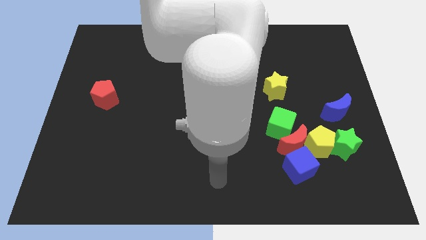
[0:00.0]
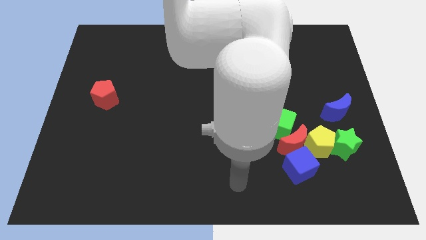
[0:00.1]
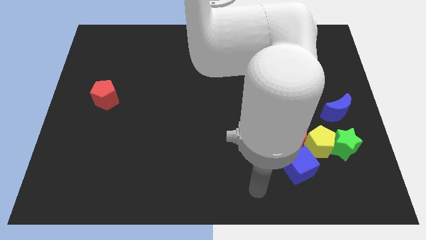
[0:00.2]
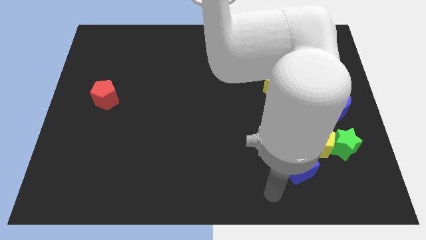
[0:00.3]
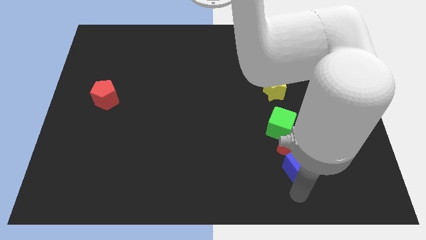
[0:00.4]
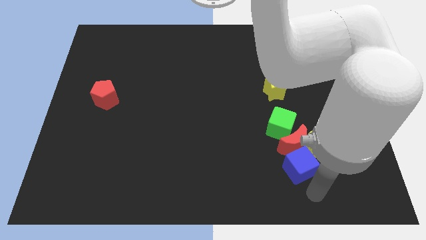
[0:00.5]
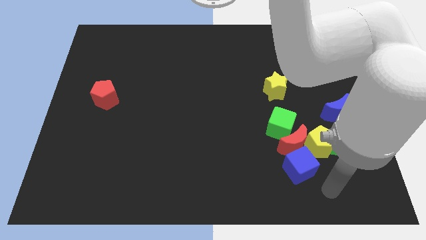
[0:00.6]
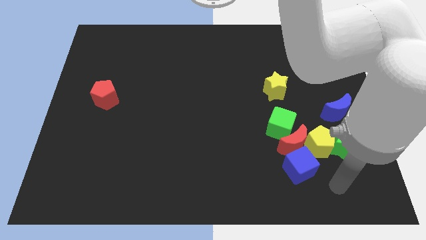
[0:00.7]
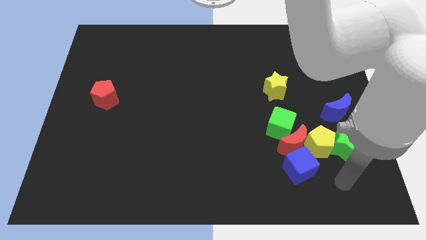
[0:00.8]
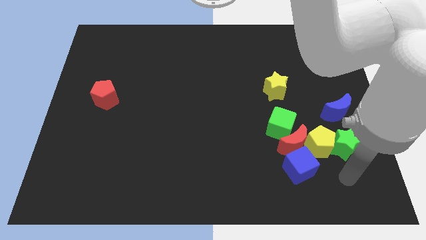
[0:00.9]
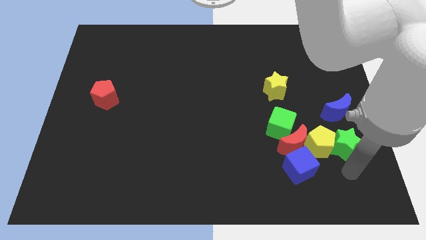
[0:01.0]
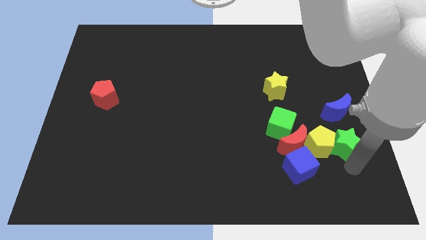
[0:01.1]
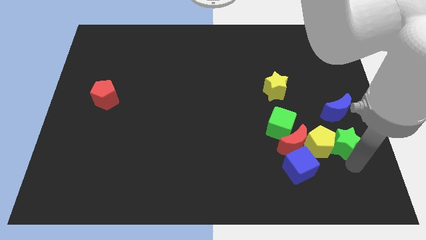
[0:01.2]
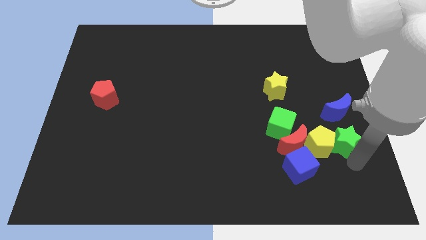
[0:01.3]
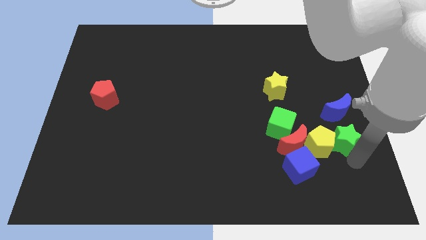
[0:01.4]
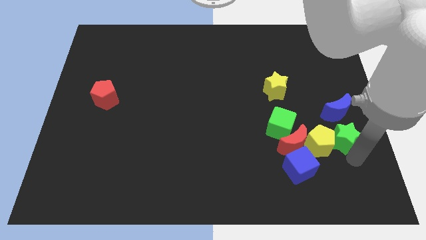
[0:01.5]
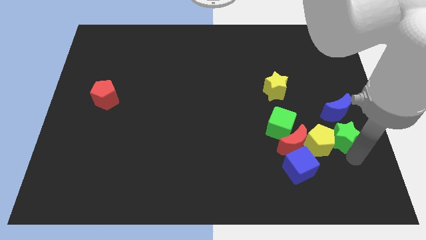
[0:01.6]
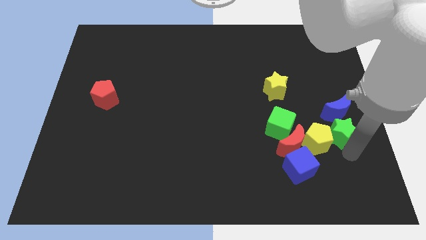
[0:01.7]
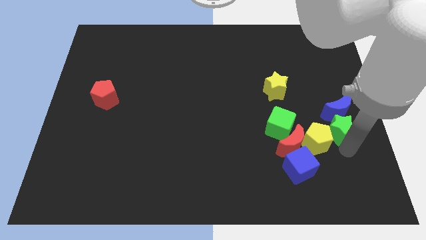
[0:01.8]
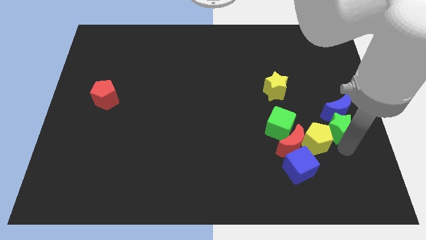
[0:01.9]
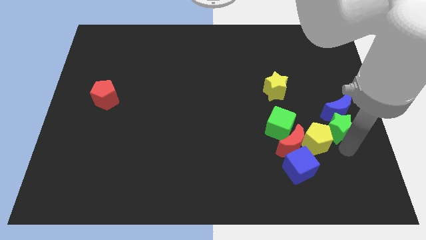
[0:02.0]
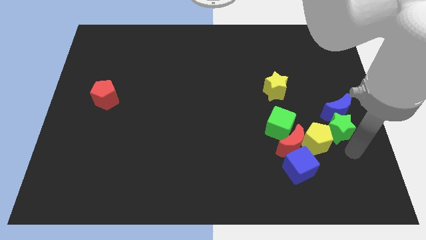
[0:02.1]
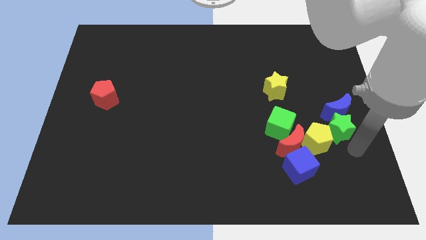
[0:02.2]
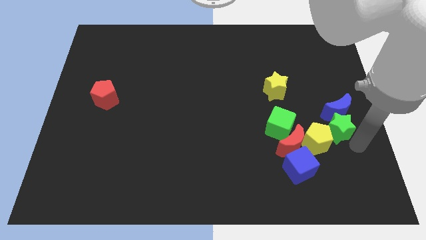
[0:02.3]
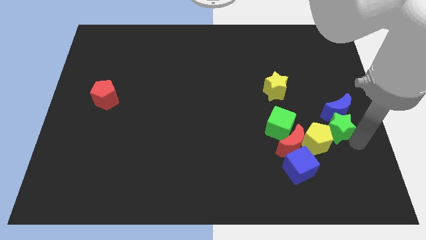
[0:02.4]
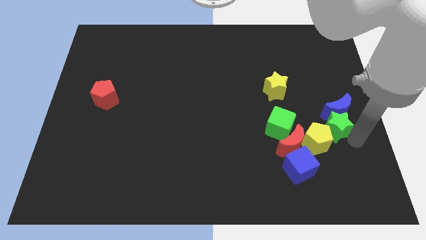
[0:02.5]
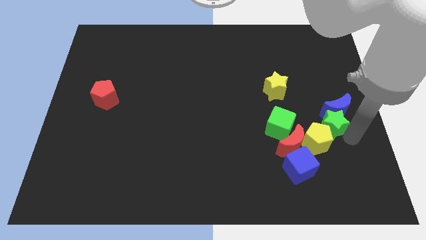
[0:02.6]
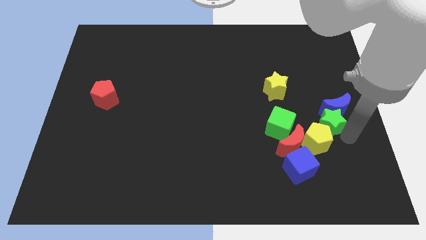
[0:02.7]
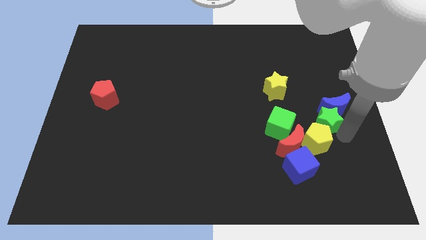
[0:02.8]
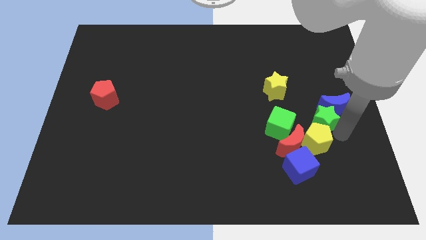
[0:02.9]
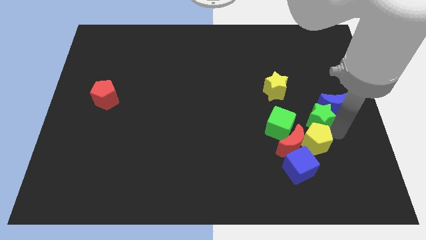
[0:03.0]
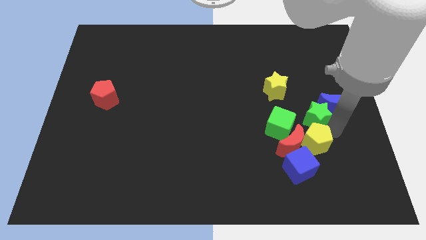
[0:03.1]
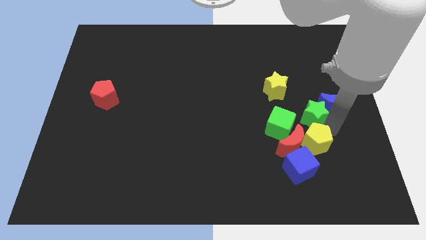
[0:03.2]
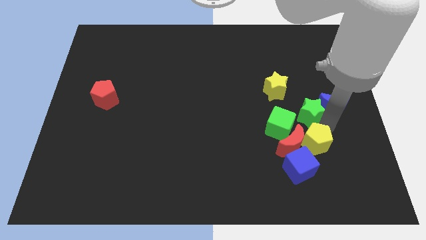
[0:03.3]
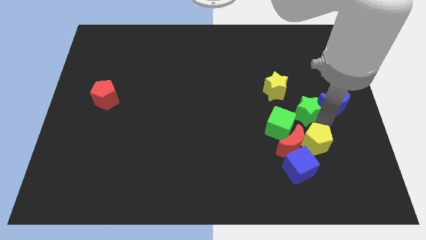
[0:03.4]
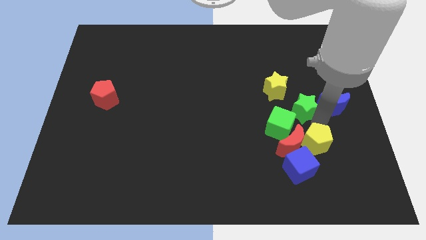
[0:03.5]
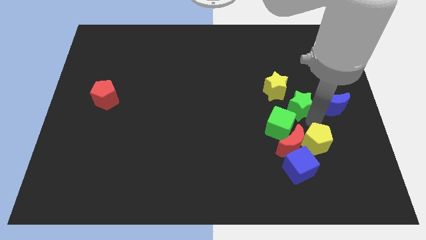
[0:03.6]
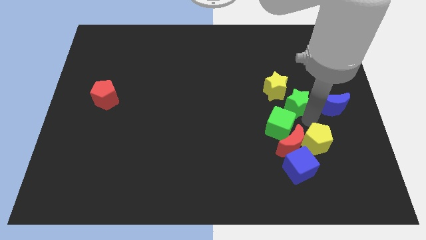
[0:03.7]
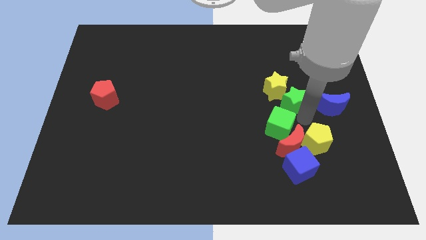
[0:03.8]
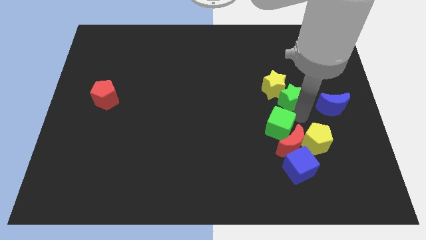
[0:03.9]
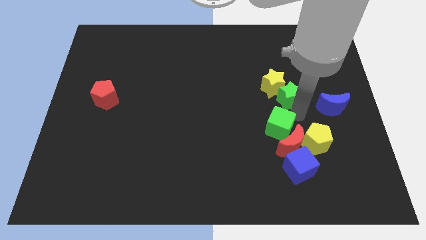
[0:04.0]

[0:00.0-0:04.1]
put the green star close to the yellow star

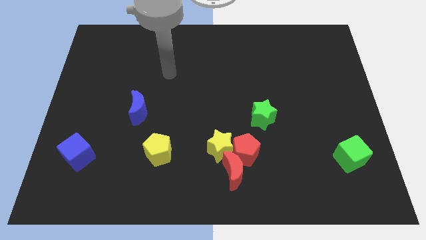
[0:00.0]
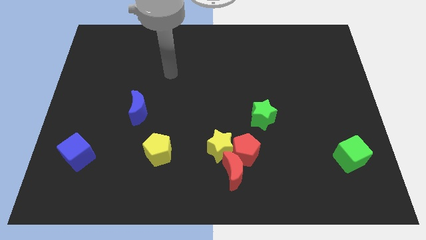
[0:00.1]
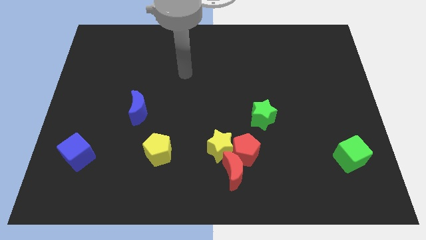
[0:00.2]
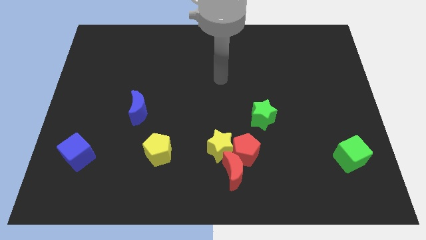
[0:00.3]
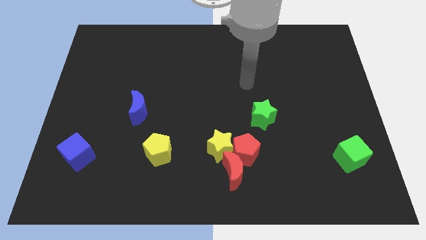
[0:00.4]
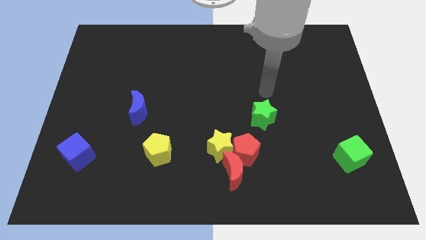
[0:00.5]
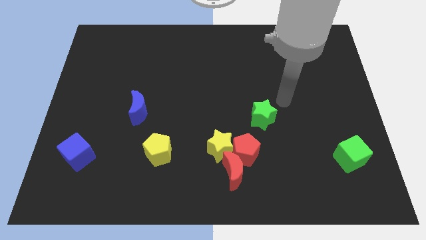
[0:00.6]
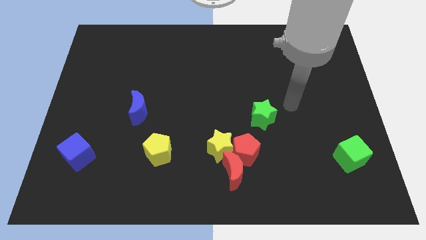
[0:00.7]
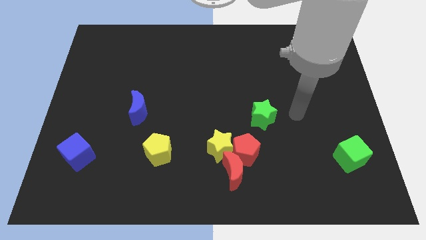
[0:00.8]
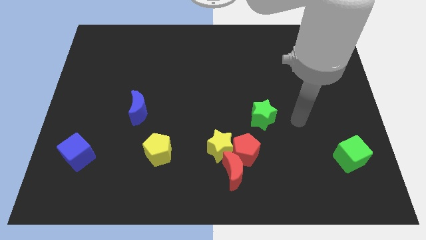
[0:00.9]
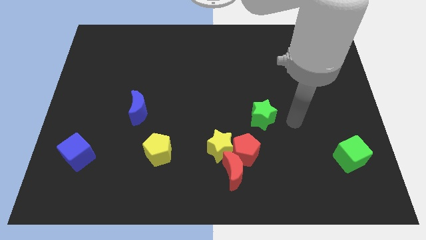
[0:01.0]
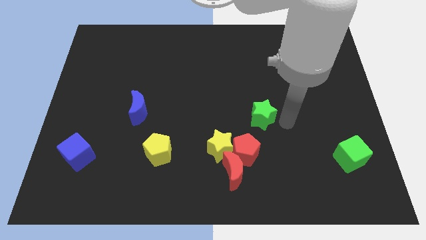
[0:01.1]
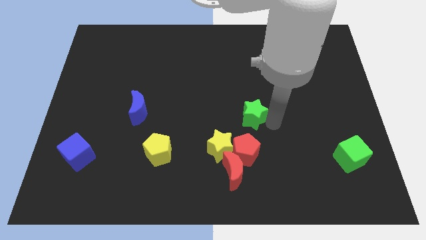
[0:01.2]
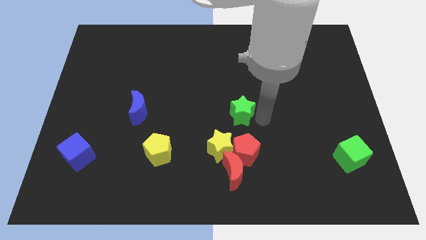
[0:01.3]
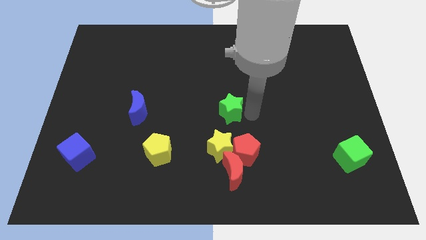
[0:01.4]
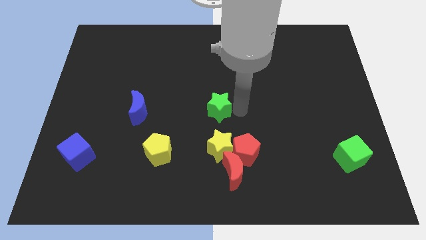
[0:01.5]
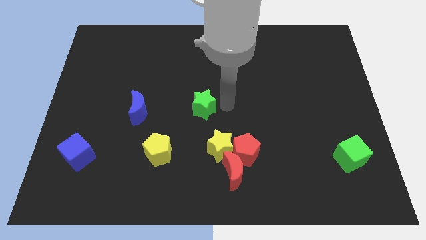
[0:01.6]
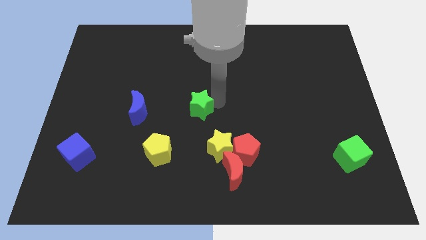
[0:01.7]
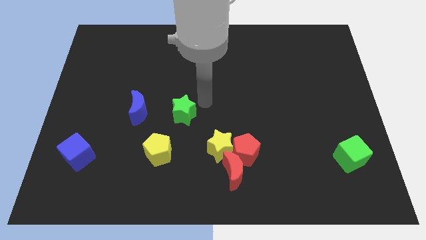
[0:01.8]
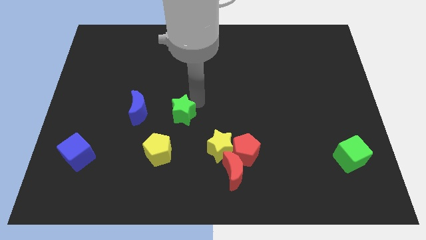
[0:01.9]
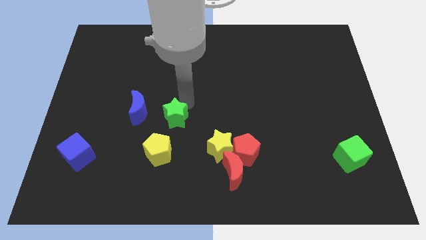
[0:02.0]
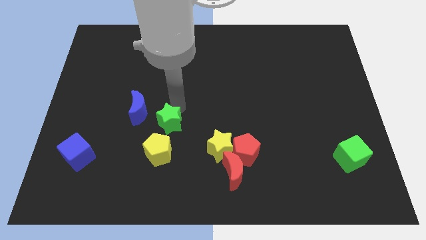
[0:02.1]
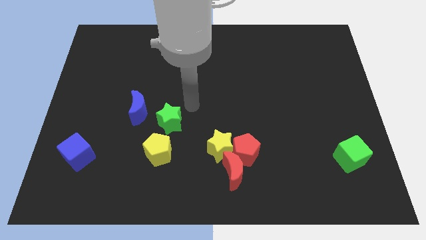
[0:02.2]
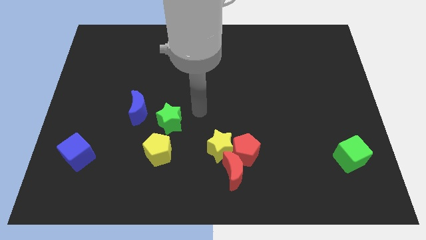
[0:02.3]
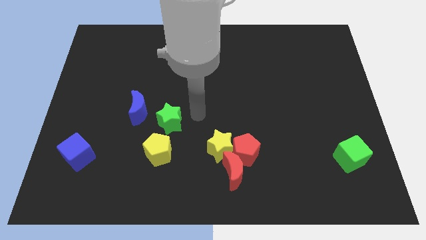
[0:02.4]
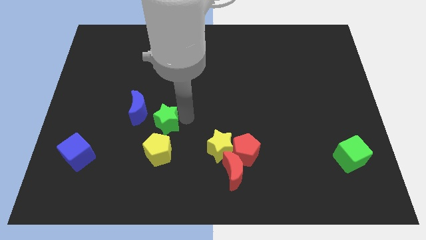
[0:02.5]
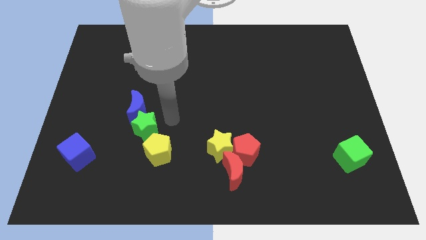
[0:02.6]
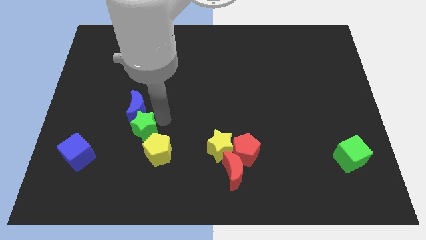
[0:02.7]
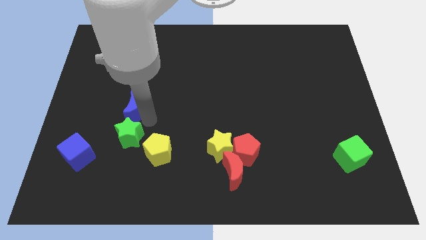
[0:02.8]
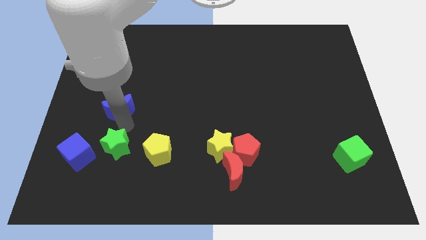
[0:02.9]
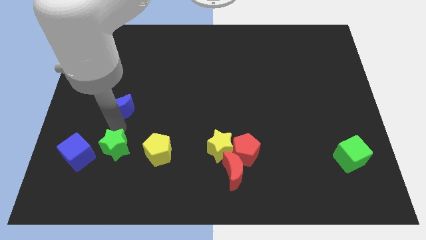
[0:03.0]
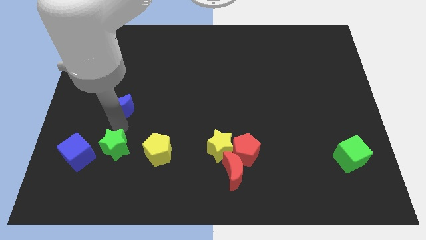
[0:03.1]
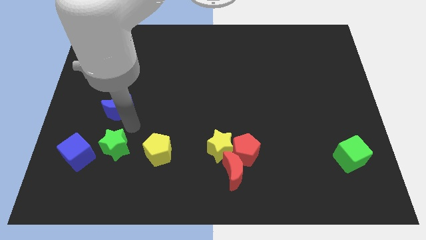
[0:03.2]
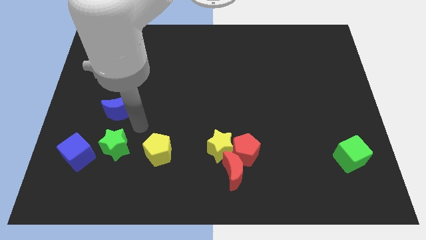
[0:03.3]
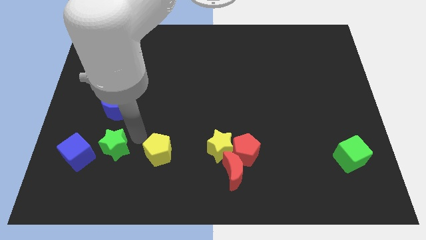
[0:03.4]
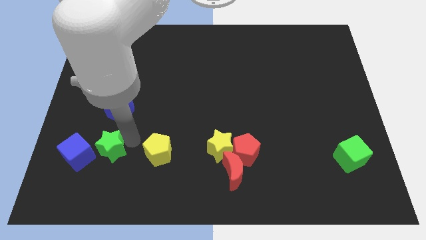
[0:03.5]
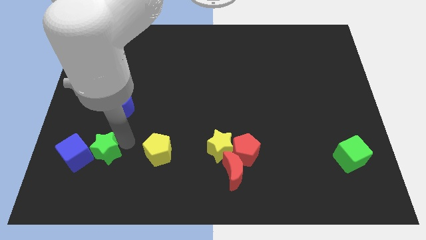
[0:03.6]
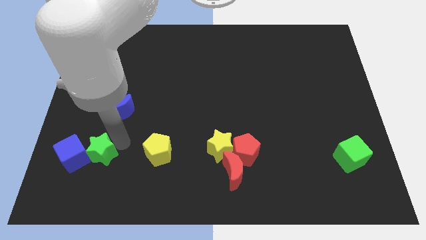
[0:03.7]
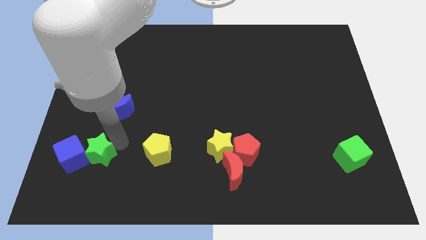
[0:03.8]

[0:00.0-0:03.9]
put the green star to the blue cube

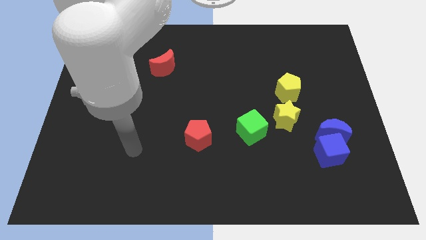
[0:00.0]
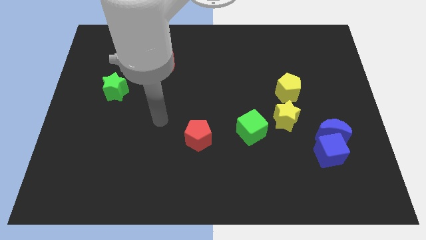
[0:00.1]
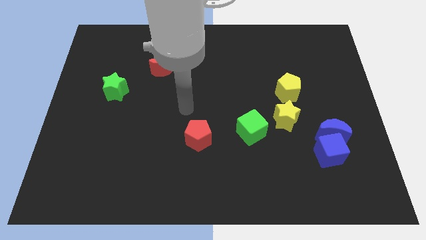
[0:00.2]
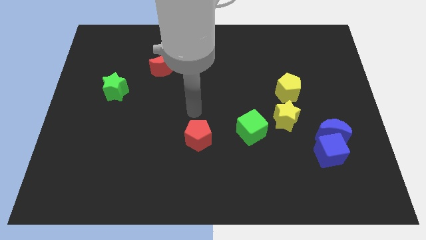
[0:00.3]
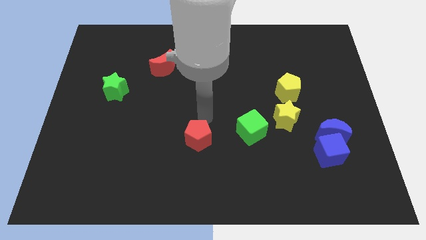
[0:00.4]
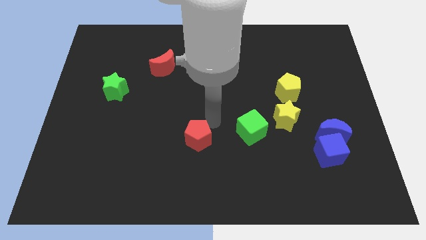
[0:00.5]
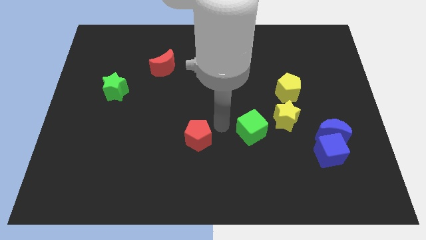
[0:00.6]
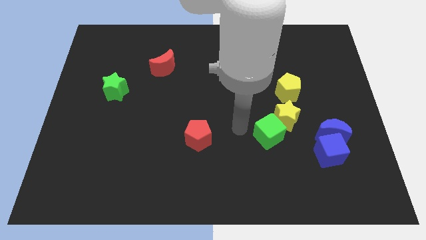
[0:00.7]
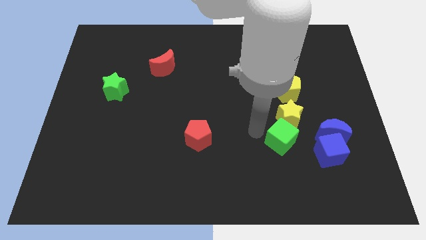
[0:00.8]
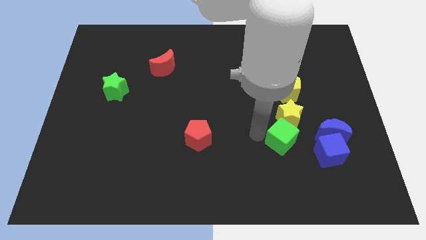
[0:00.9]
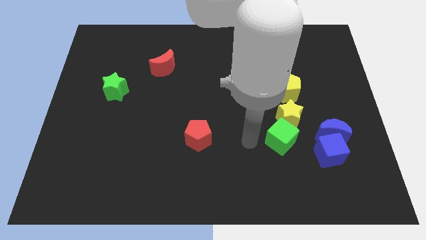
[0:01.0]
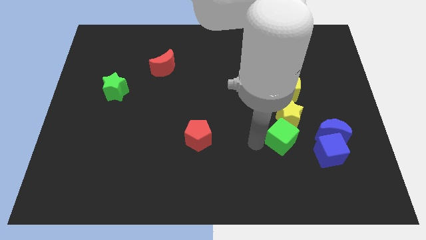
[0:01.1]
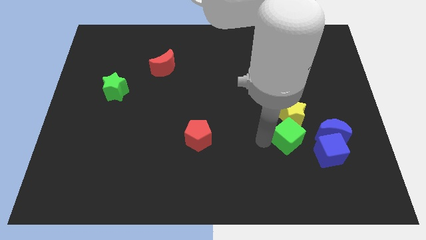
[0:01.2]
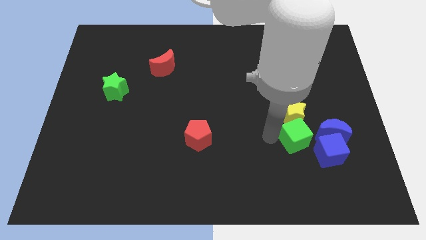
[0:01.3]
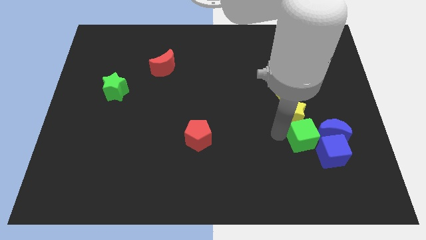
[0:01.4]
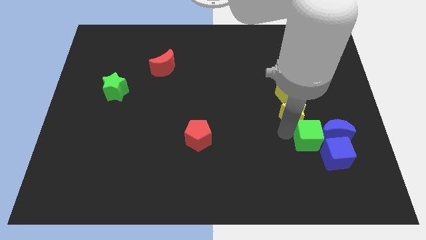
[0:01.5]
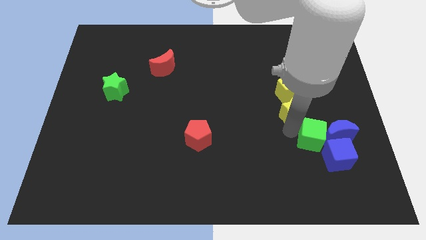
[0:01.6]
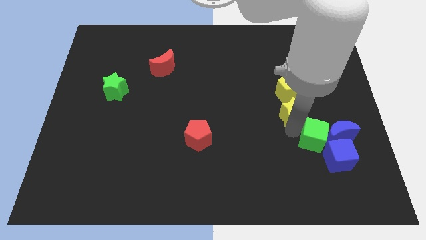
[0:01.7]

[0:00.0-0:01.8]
move the green cube next to the blue moon
